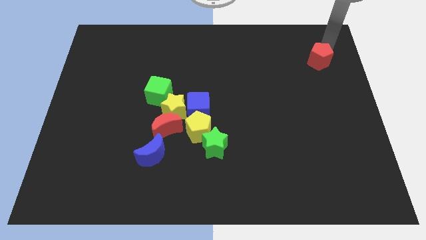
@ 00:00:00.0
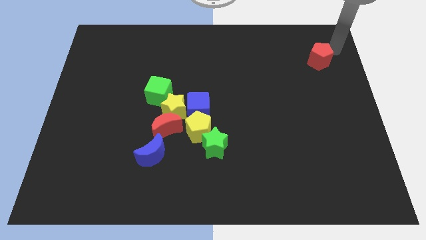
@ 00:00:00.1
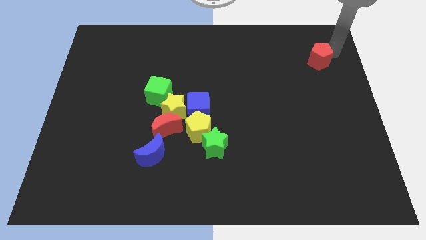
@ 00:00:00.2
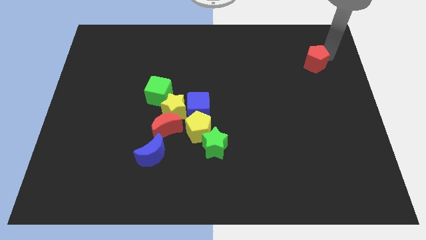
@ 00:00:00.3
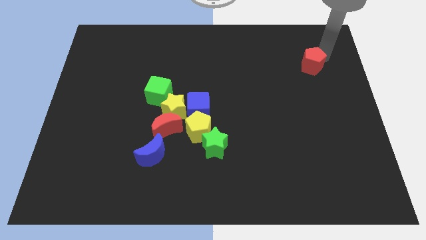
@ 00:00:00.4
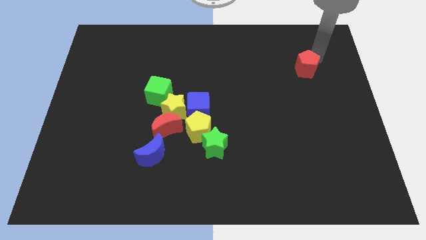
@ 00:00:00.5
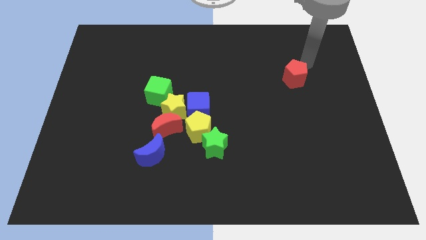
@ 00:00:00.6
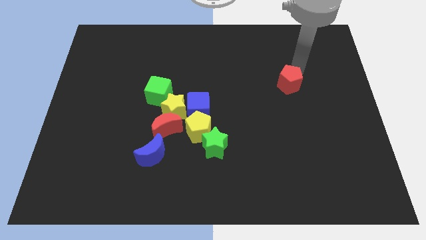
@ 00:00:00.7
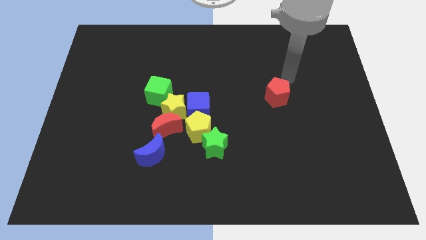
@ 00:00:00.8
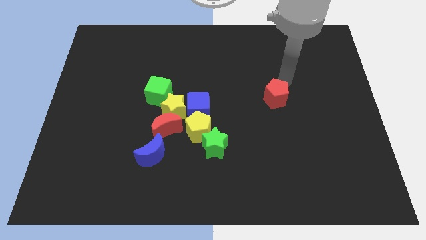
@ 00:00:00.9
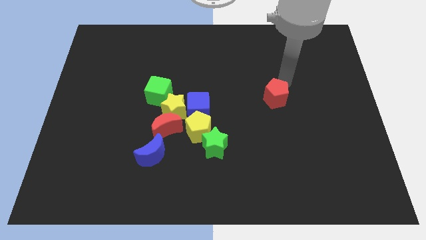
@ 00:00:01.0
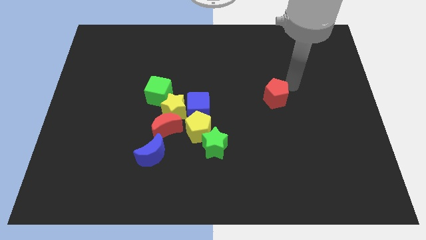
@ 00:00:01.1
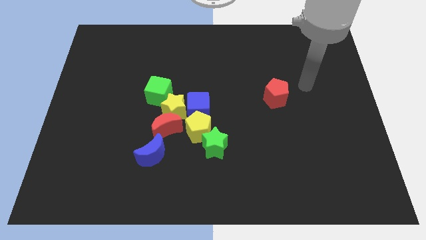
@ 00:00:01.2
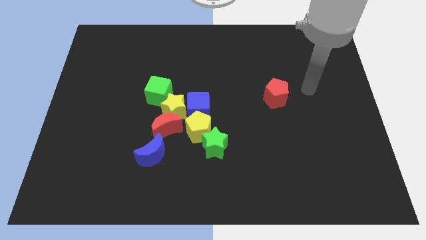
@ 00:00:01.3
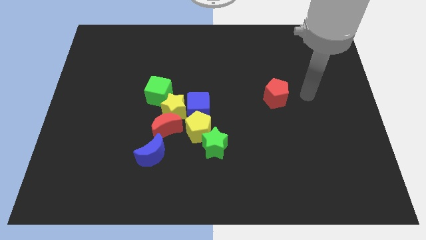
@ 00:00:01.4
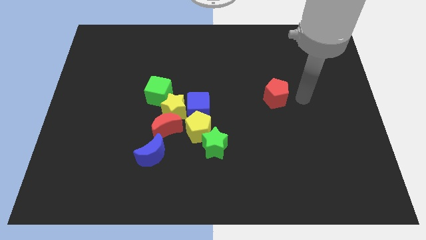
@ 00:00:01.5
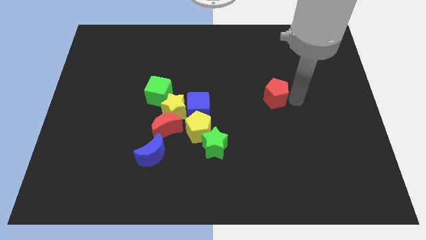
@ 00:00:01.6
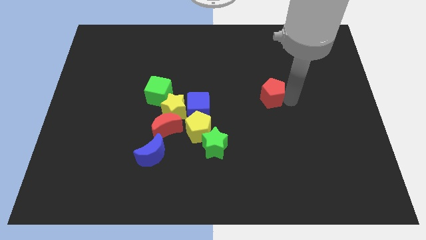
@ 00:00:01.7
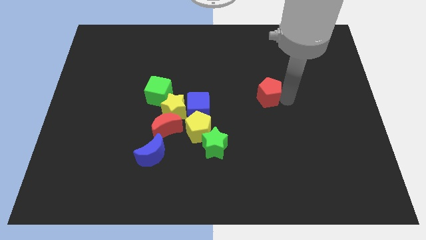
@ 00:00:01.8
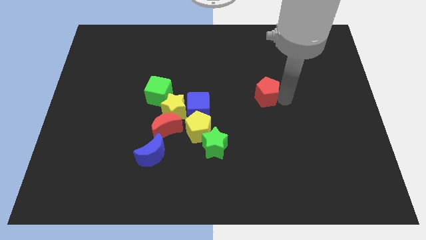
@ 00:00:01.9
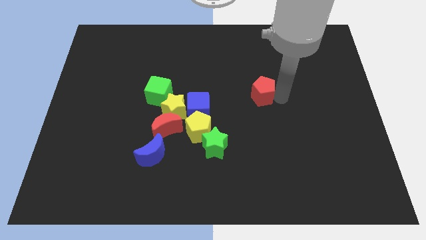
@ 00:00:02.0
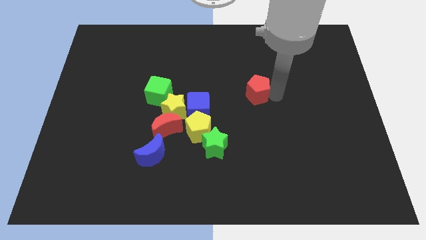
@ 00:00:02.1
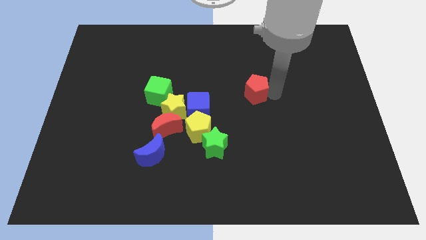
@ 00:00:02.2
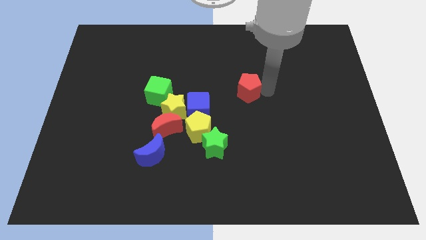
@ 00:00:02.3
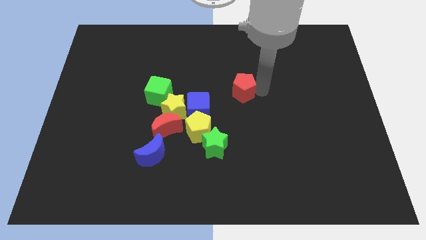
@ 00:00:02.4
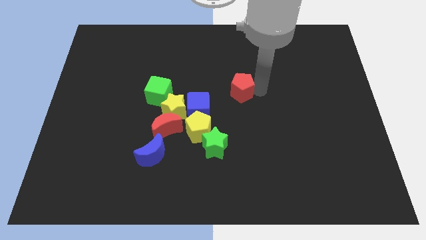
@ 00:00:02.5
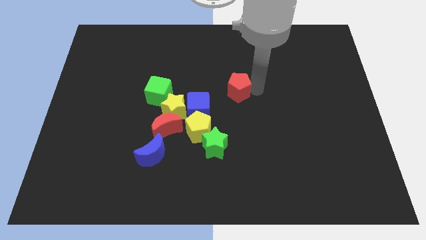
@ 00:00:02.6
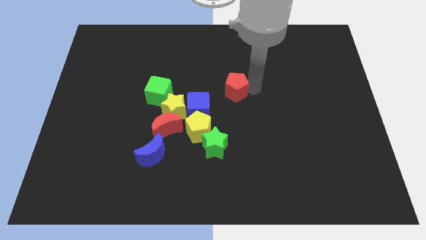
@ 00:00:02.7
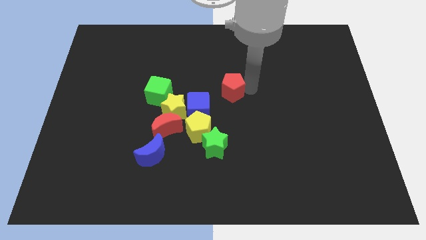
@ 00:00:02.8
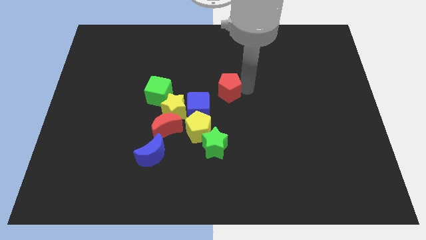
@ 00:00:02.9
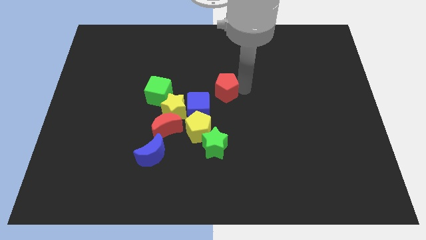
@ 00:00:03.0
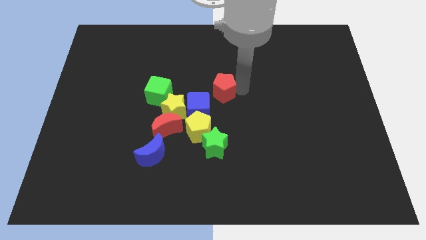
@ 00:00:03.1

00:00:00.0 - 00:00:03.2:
push the red pentagon towards the center

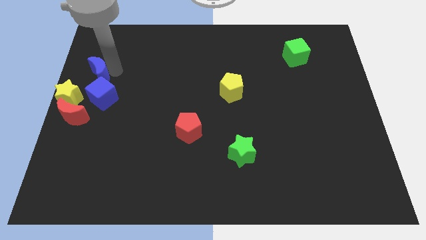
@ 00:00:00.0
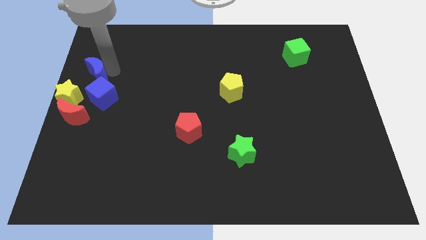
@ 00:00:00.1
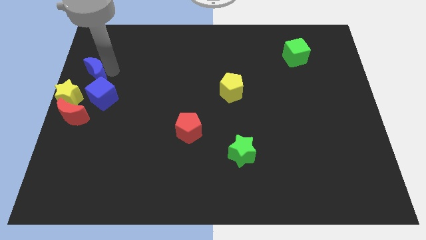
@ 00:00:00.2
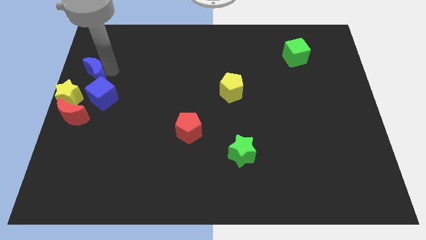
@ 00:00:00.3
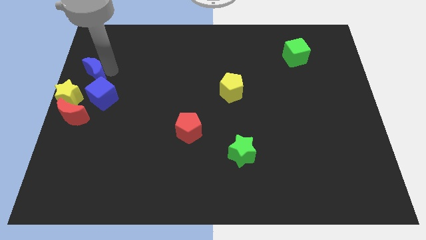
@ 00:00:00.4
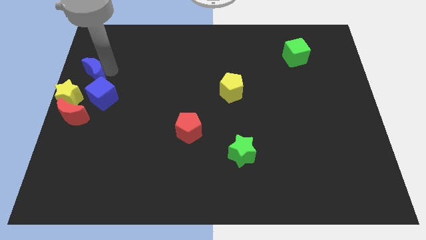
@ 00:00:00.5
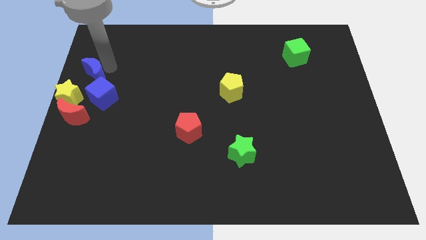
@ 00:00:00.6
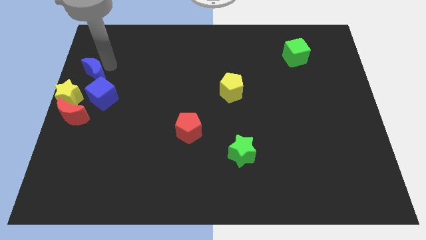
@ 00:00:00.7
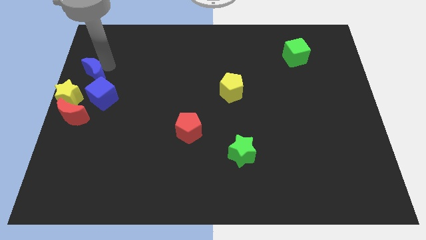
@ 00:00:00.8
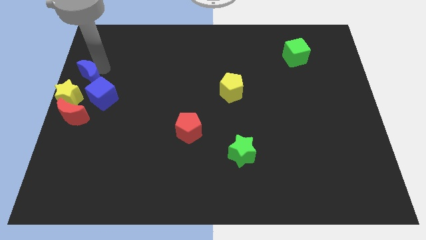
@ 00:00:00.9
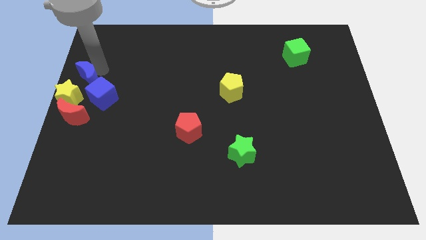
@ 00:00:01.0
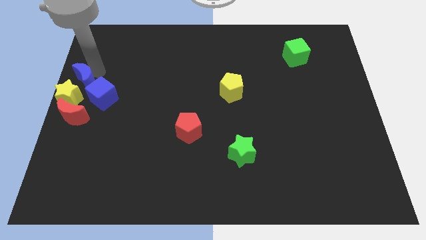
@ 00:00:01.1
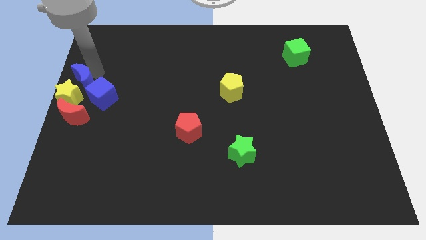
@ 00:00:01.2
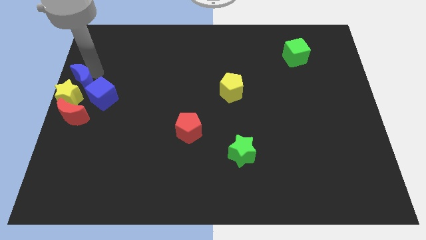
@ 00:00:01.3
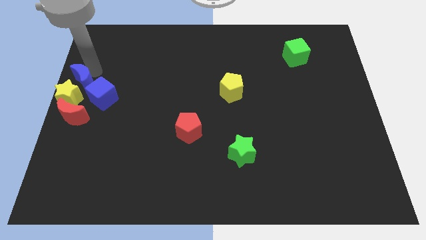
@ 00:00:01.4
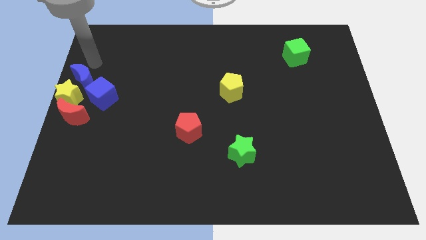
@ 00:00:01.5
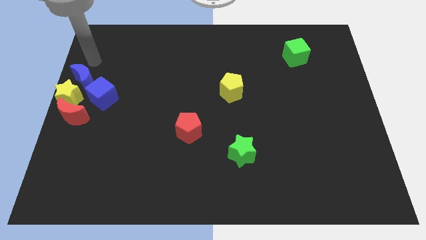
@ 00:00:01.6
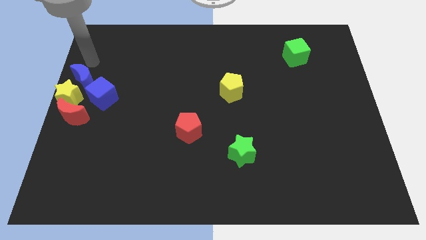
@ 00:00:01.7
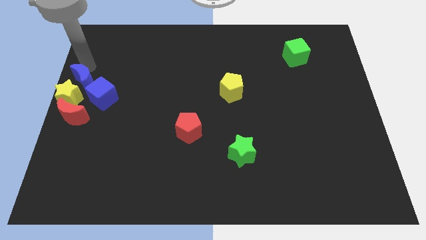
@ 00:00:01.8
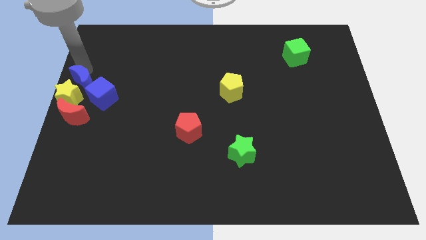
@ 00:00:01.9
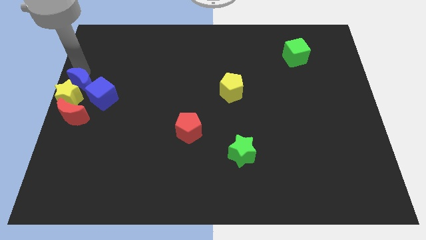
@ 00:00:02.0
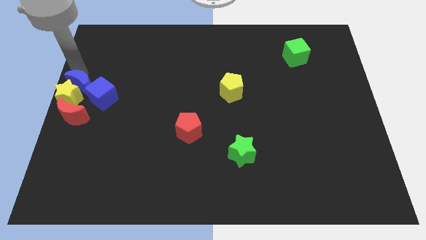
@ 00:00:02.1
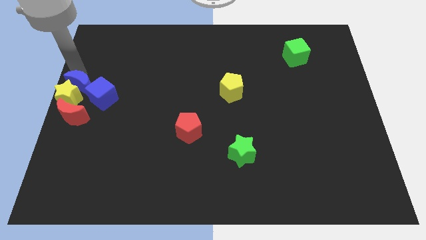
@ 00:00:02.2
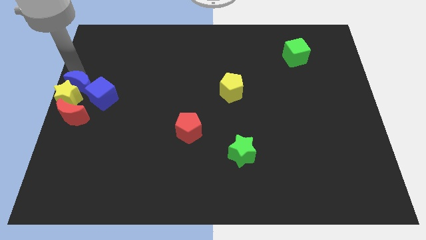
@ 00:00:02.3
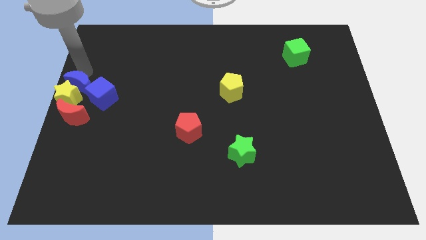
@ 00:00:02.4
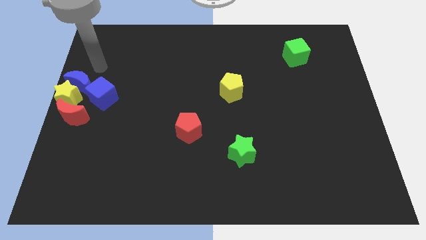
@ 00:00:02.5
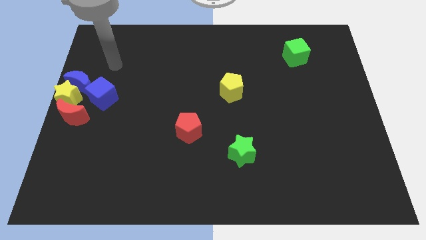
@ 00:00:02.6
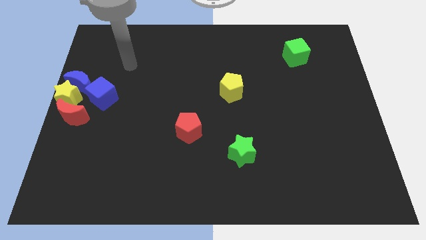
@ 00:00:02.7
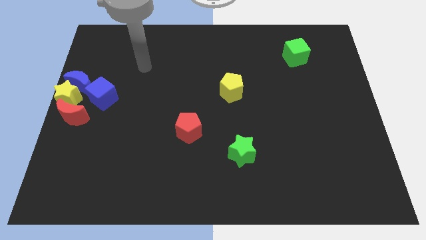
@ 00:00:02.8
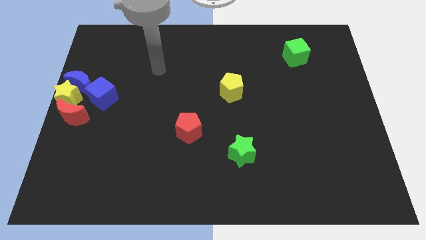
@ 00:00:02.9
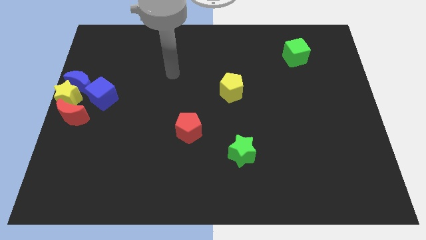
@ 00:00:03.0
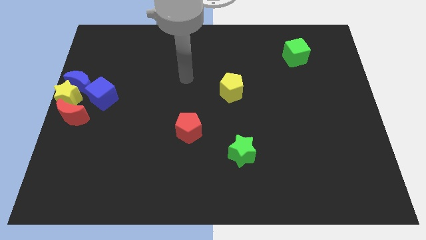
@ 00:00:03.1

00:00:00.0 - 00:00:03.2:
move the blue moon above the yellow star

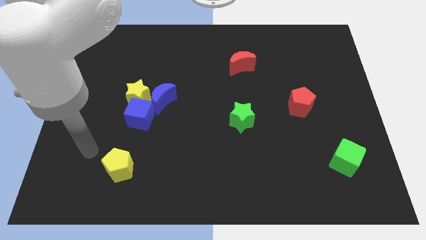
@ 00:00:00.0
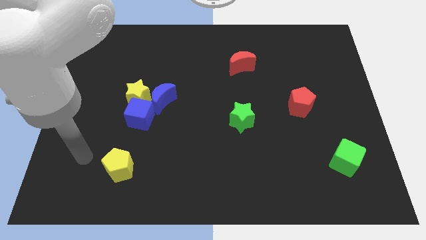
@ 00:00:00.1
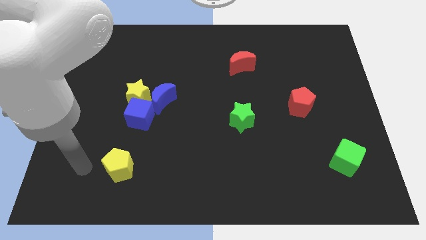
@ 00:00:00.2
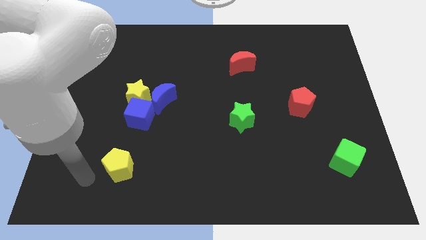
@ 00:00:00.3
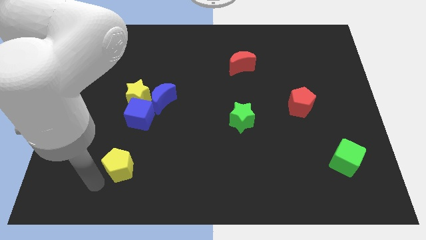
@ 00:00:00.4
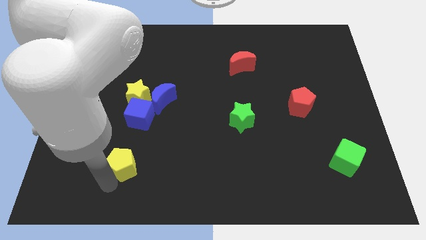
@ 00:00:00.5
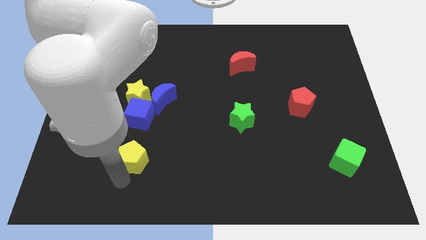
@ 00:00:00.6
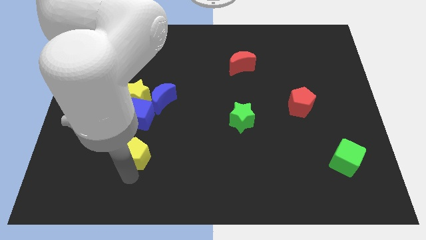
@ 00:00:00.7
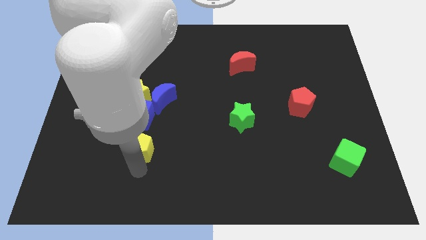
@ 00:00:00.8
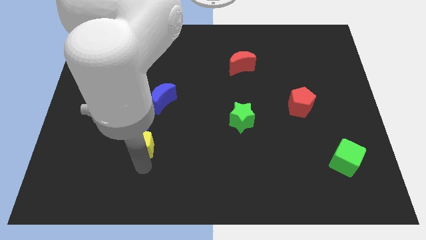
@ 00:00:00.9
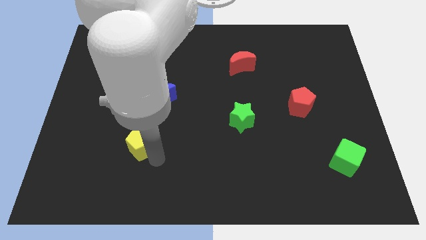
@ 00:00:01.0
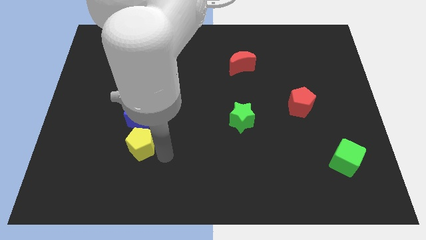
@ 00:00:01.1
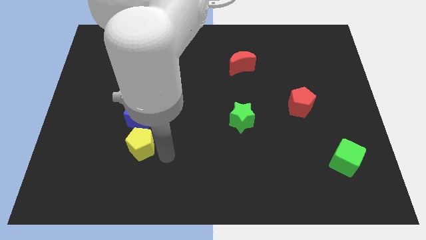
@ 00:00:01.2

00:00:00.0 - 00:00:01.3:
place yellow pentagon to the bottom of blue cube

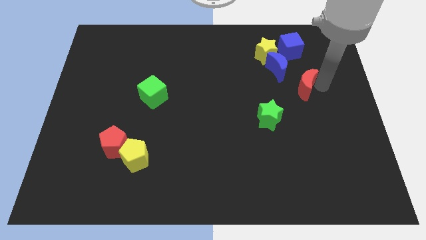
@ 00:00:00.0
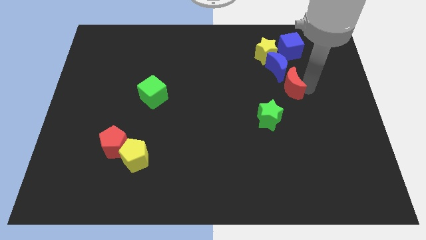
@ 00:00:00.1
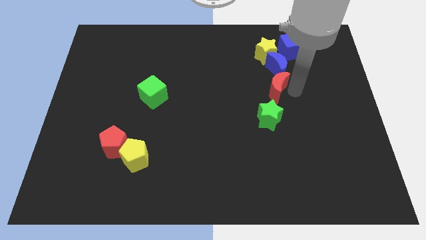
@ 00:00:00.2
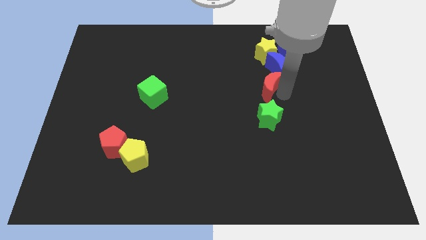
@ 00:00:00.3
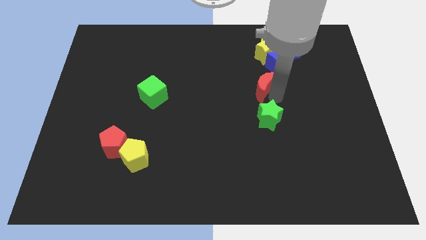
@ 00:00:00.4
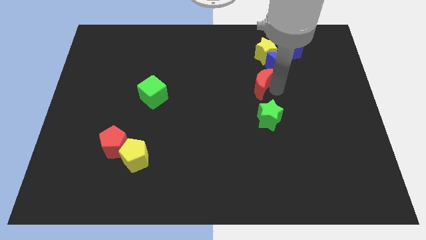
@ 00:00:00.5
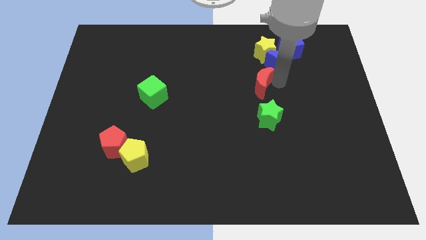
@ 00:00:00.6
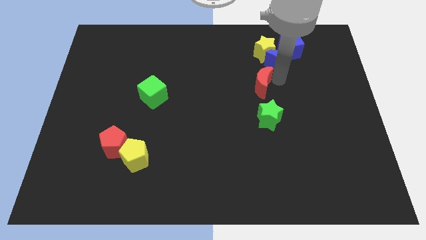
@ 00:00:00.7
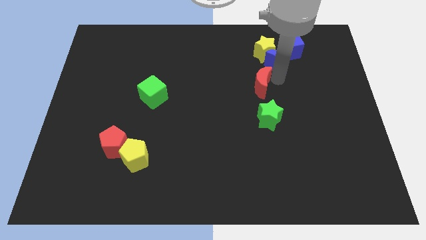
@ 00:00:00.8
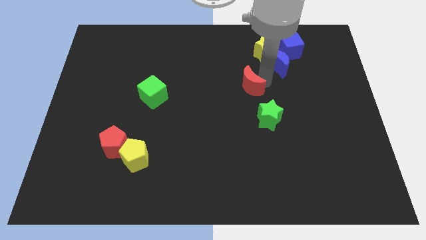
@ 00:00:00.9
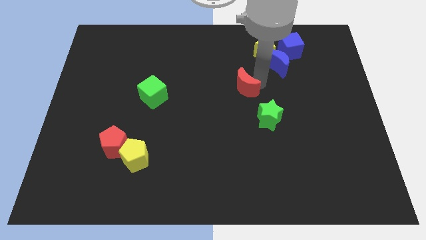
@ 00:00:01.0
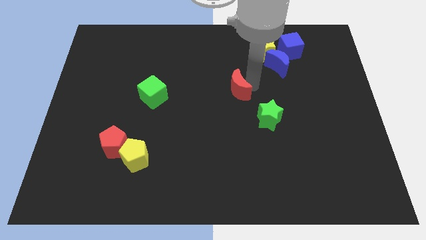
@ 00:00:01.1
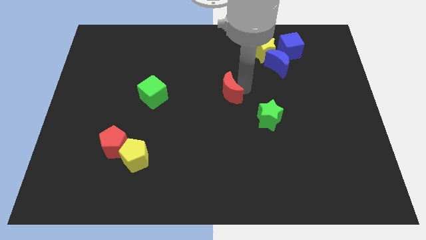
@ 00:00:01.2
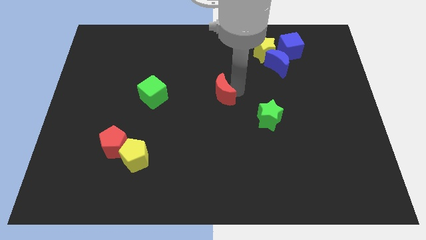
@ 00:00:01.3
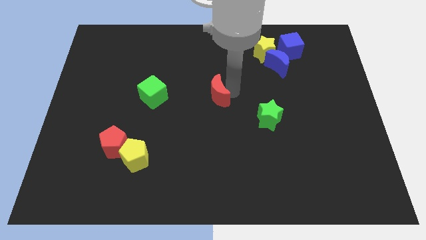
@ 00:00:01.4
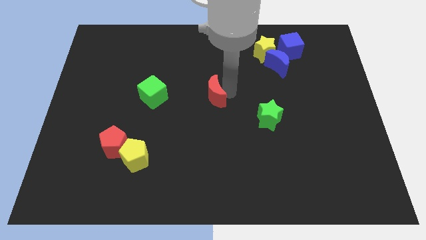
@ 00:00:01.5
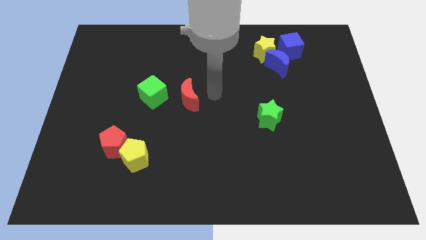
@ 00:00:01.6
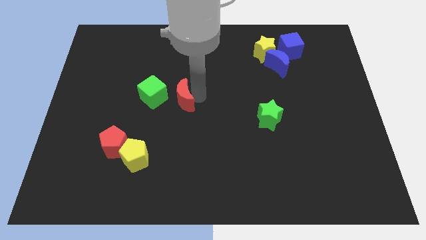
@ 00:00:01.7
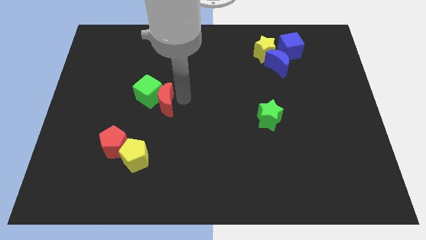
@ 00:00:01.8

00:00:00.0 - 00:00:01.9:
move the red moon into the green cube
